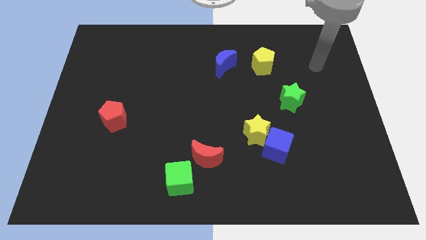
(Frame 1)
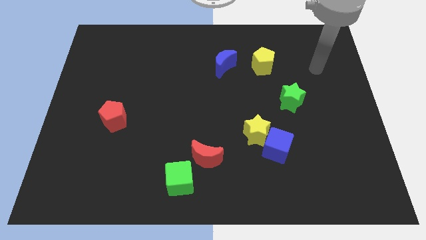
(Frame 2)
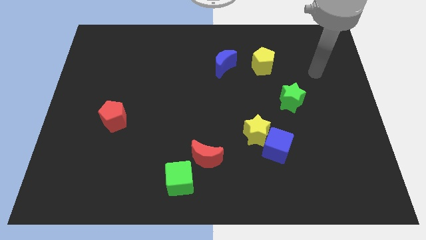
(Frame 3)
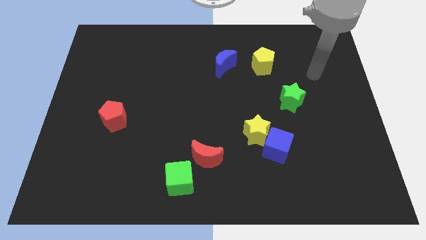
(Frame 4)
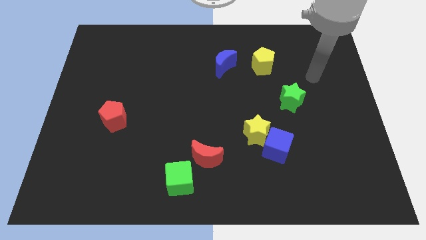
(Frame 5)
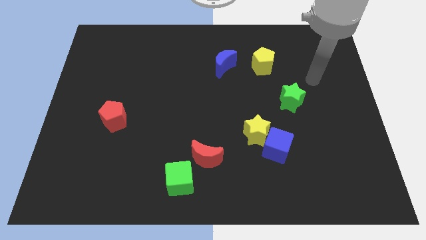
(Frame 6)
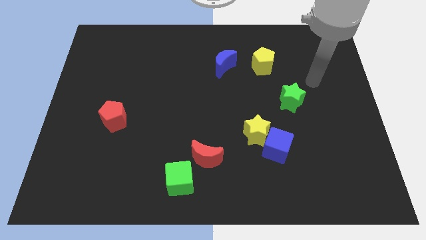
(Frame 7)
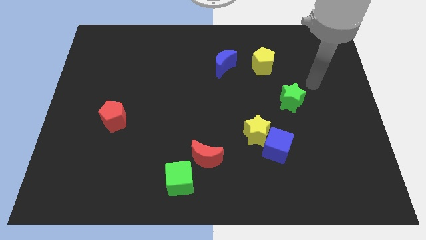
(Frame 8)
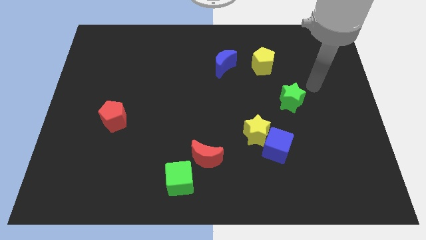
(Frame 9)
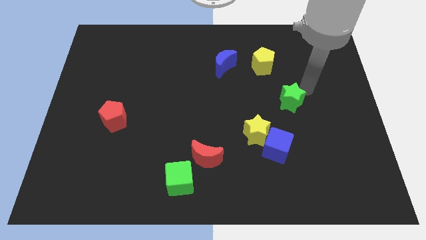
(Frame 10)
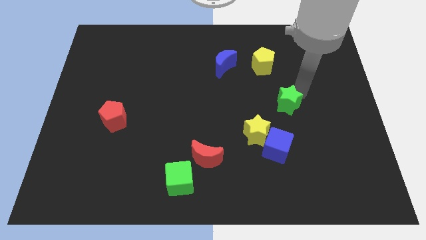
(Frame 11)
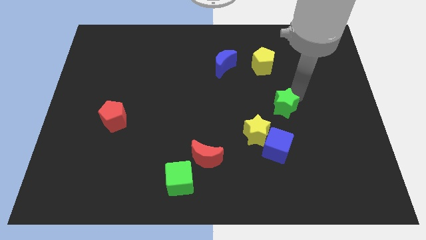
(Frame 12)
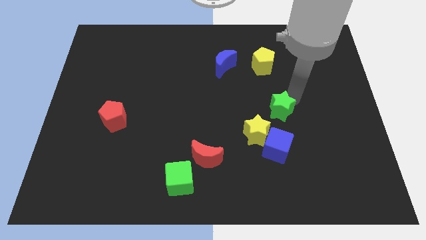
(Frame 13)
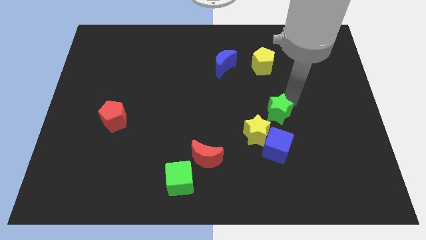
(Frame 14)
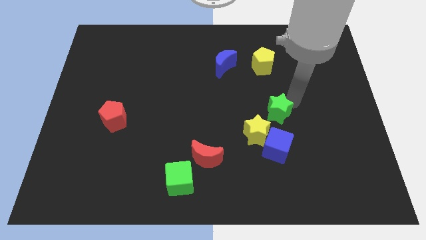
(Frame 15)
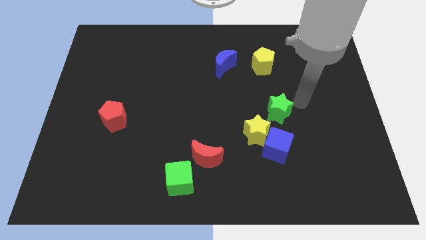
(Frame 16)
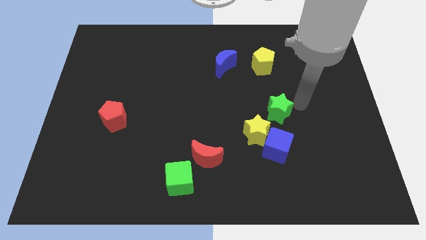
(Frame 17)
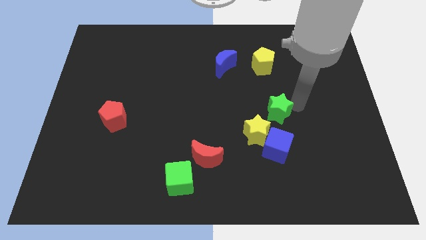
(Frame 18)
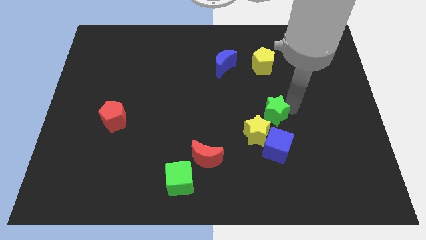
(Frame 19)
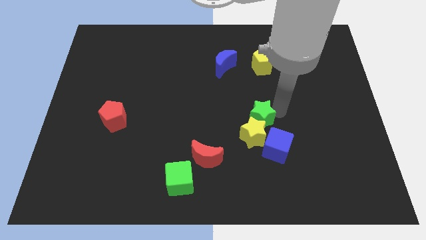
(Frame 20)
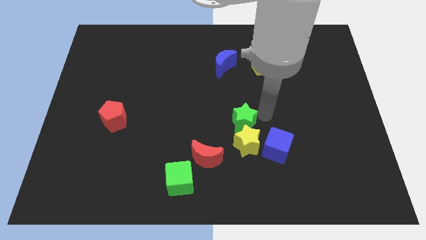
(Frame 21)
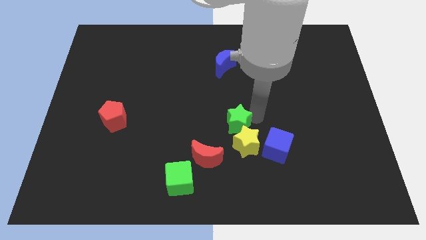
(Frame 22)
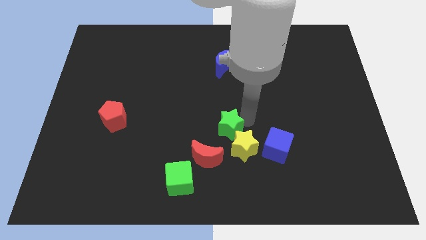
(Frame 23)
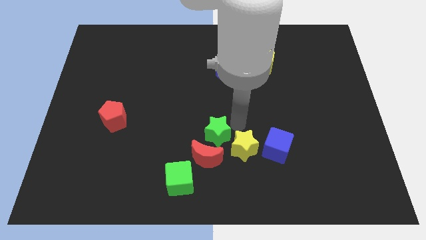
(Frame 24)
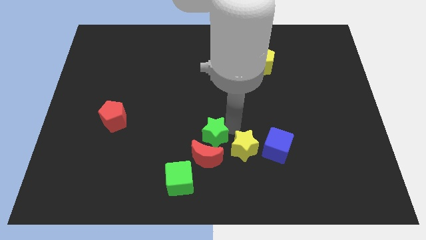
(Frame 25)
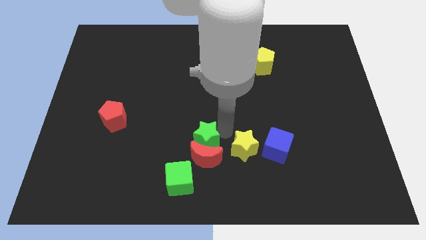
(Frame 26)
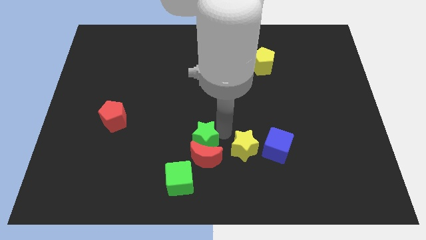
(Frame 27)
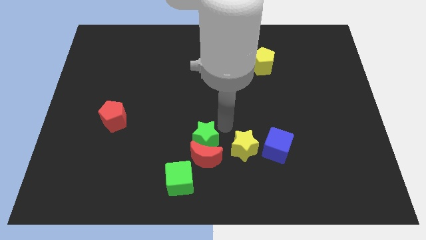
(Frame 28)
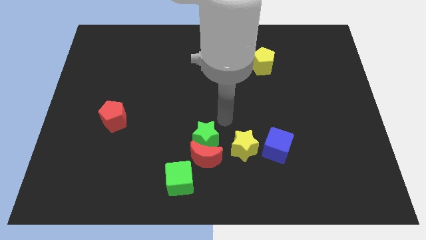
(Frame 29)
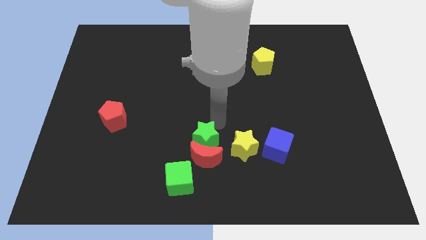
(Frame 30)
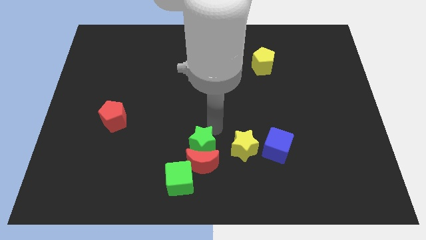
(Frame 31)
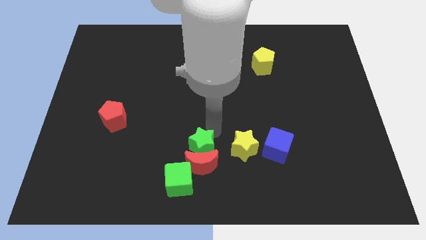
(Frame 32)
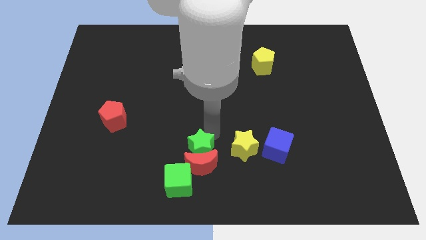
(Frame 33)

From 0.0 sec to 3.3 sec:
move the green star above the red moon

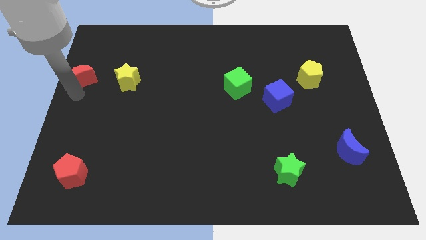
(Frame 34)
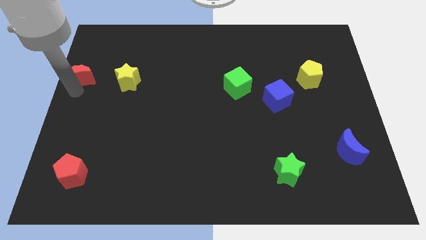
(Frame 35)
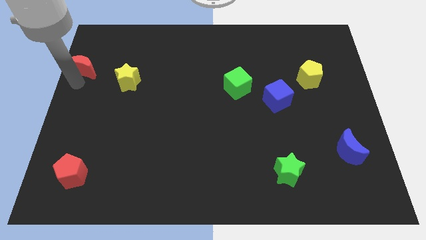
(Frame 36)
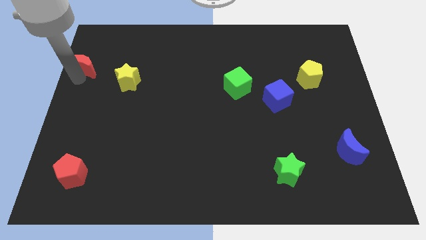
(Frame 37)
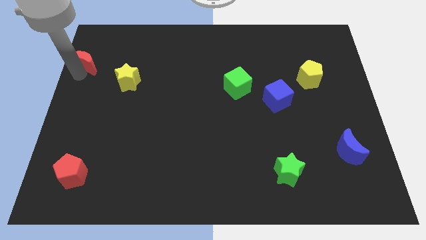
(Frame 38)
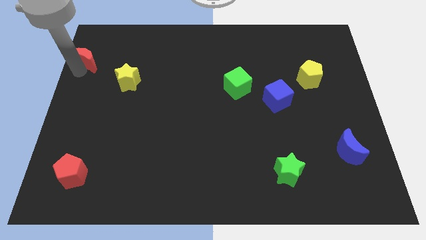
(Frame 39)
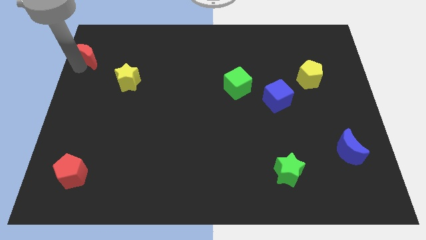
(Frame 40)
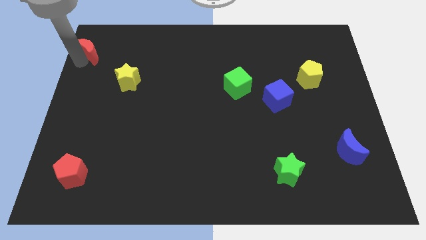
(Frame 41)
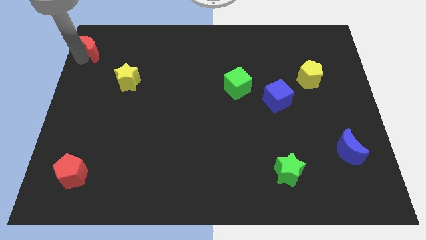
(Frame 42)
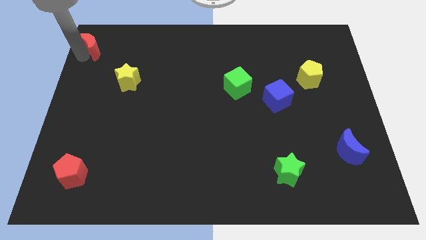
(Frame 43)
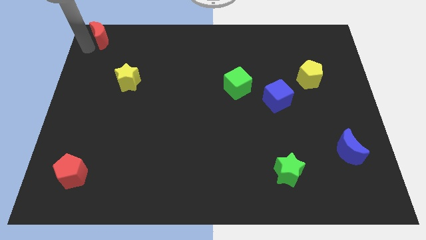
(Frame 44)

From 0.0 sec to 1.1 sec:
put the red moon on the top left of the board

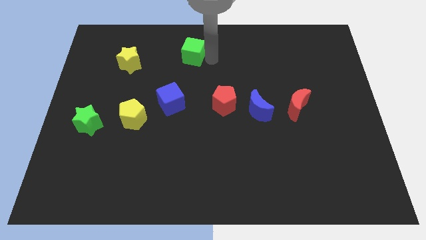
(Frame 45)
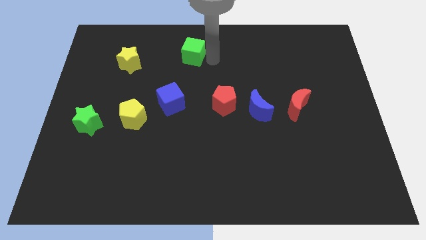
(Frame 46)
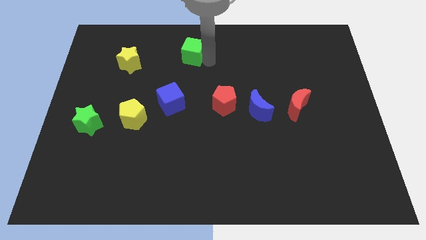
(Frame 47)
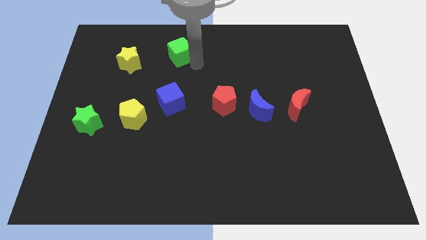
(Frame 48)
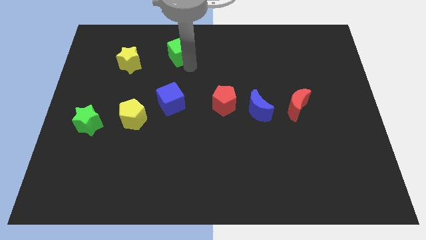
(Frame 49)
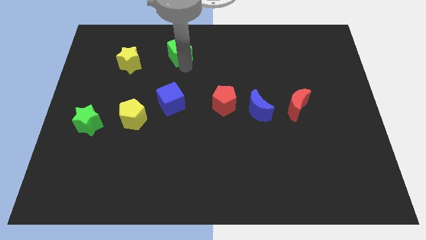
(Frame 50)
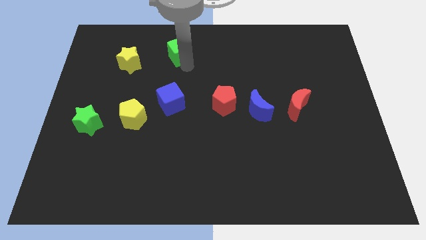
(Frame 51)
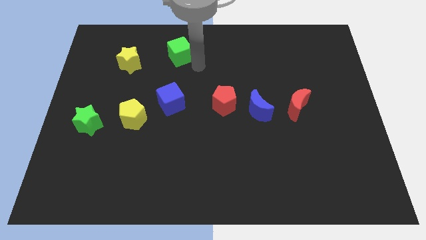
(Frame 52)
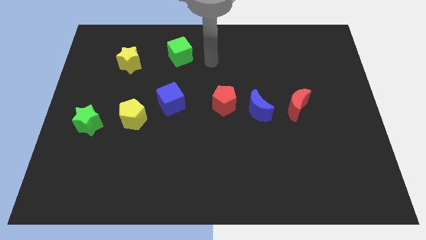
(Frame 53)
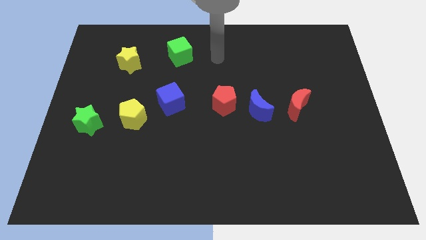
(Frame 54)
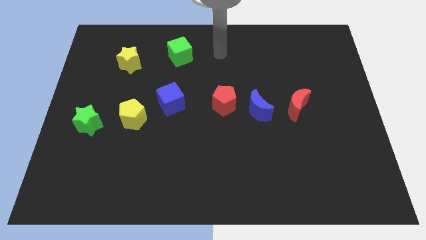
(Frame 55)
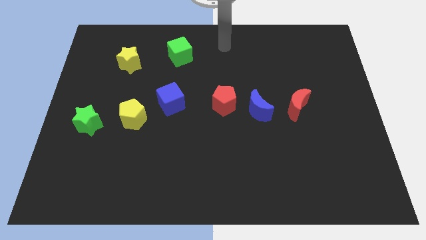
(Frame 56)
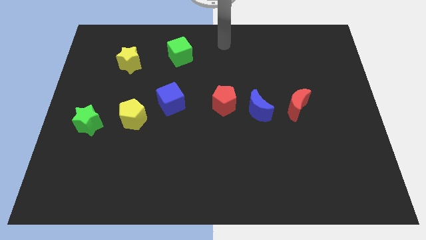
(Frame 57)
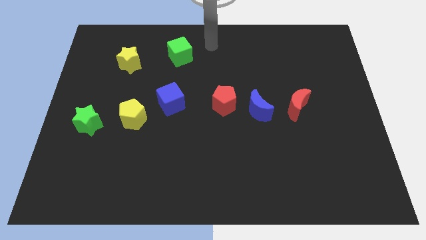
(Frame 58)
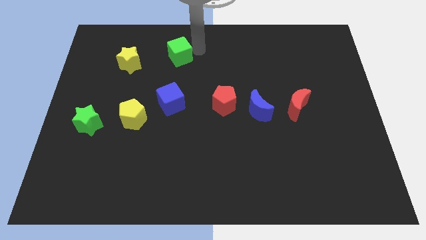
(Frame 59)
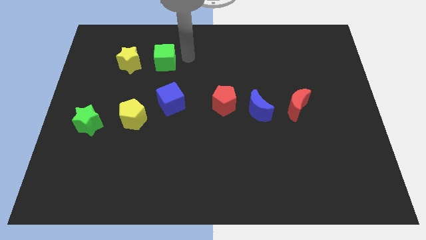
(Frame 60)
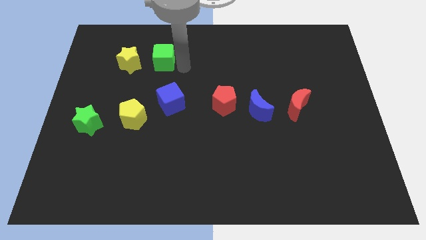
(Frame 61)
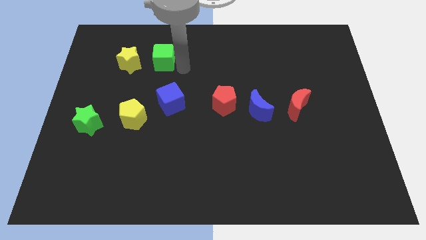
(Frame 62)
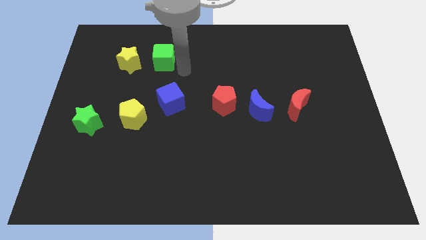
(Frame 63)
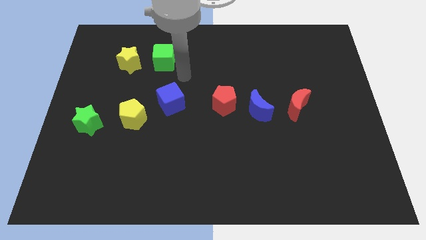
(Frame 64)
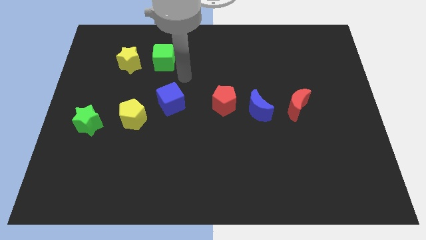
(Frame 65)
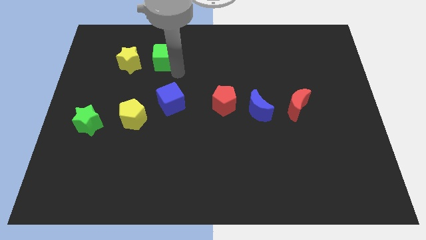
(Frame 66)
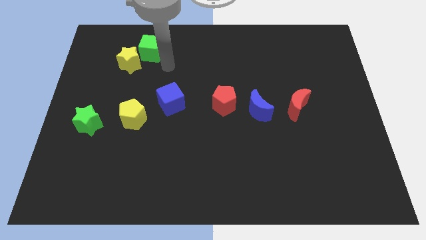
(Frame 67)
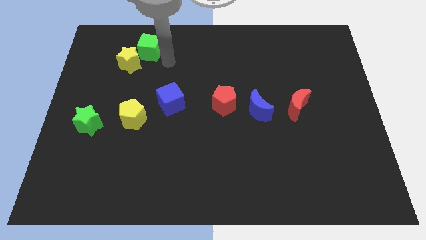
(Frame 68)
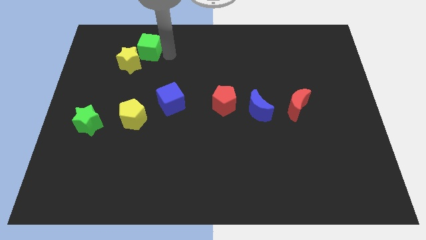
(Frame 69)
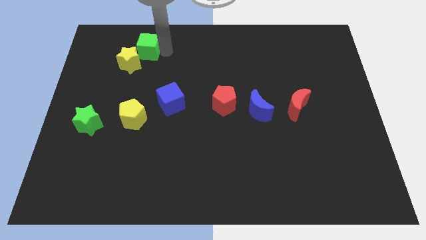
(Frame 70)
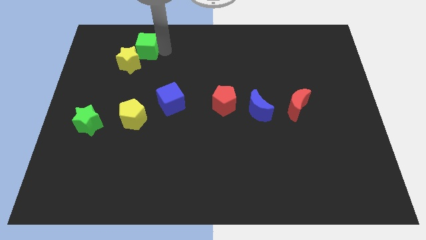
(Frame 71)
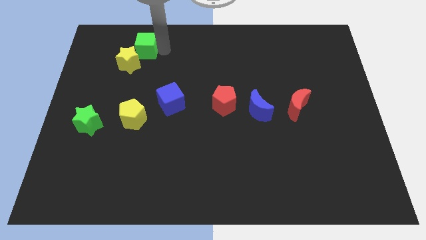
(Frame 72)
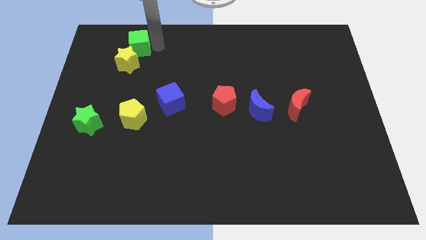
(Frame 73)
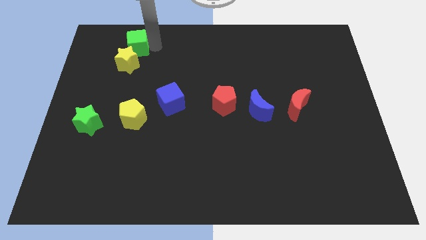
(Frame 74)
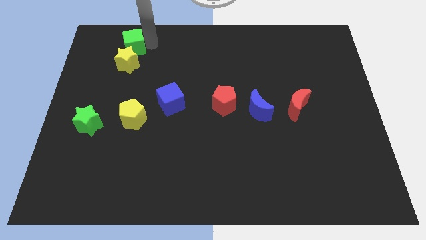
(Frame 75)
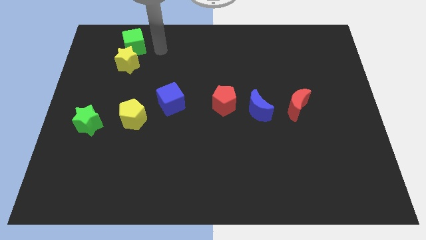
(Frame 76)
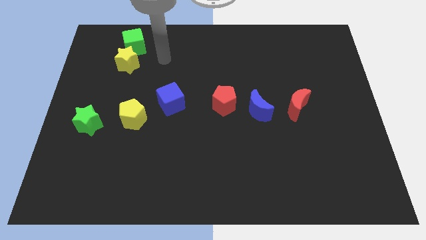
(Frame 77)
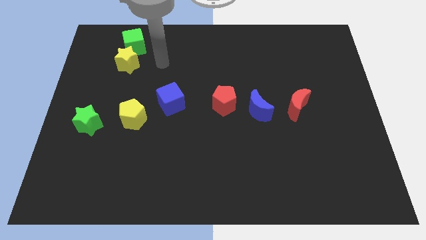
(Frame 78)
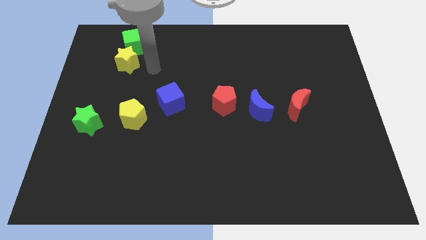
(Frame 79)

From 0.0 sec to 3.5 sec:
push green cube slightly above yellow star

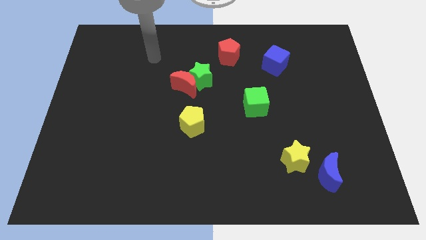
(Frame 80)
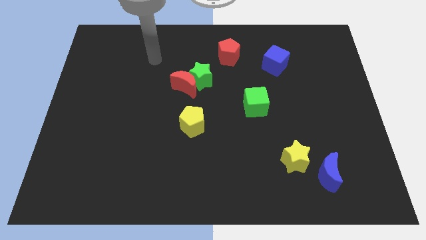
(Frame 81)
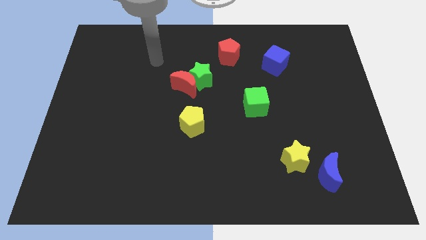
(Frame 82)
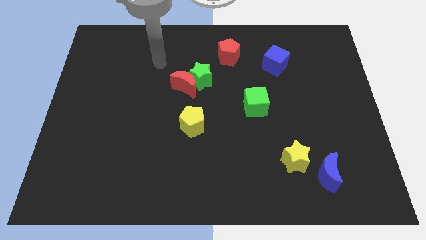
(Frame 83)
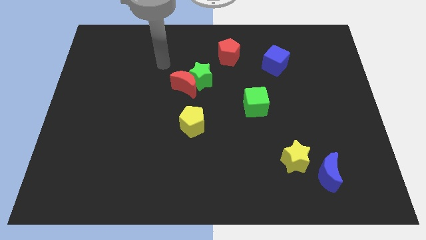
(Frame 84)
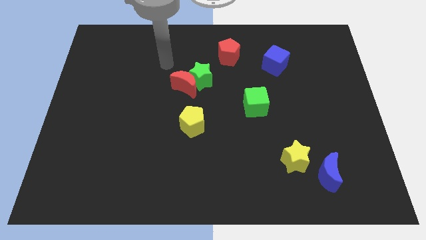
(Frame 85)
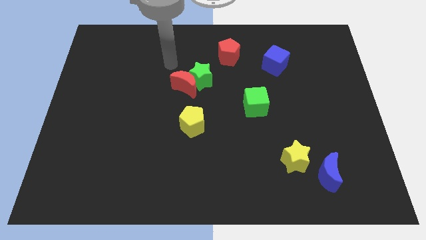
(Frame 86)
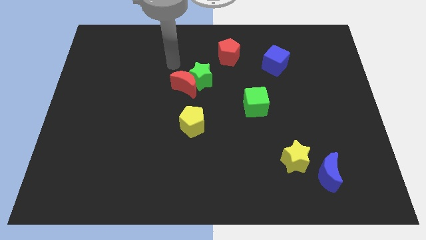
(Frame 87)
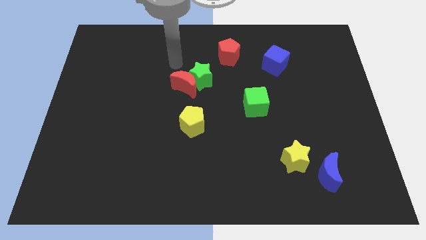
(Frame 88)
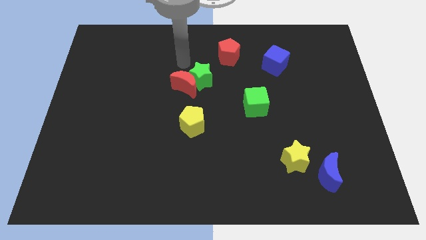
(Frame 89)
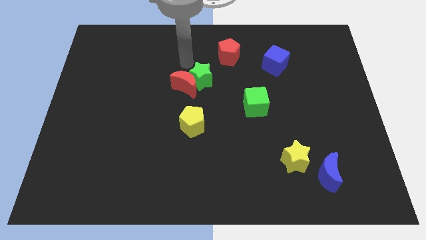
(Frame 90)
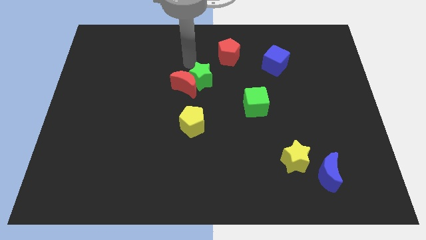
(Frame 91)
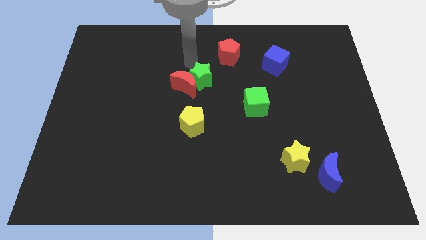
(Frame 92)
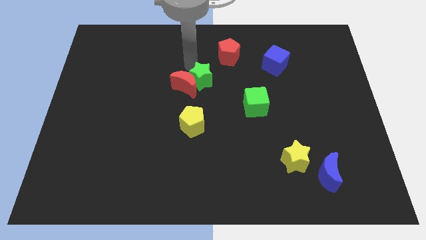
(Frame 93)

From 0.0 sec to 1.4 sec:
point your arm above the green star
